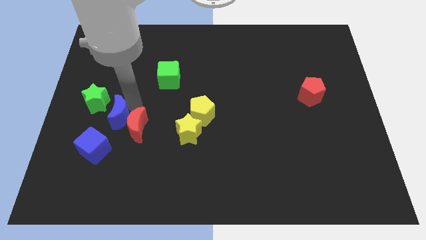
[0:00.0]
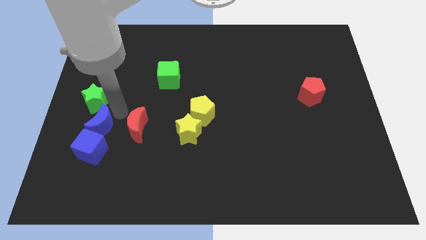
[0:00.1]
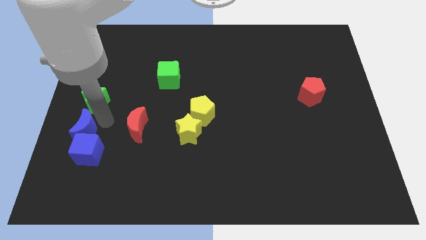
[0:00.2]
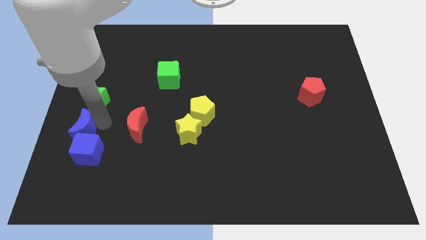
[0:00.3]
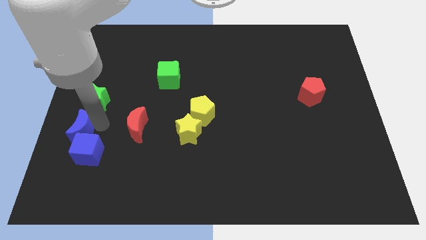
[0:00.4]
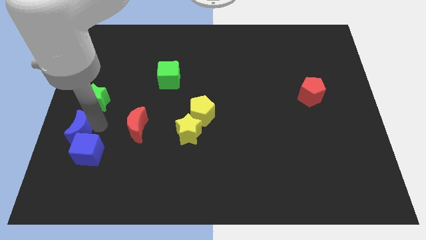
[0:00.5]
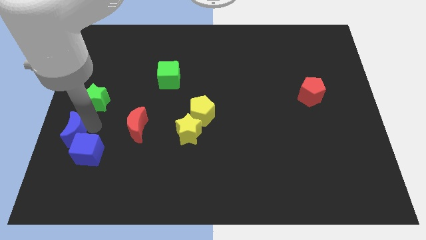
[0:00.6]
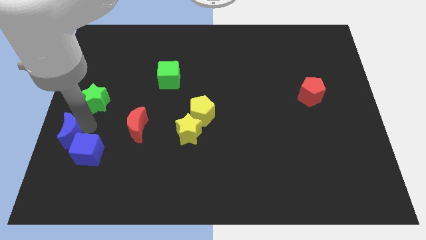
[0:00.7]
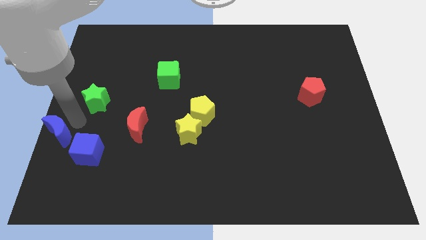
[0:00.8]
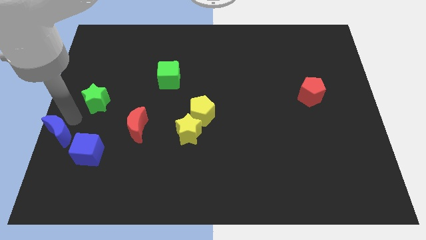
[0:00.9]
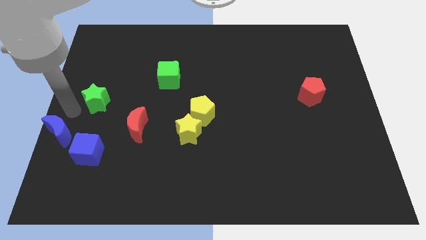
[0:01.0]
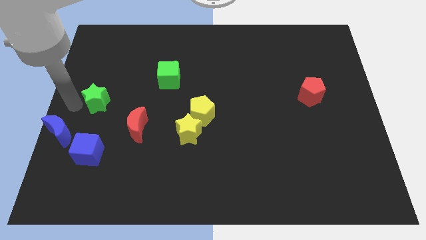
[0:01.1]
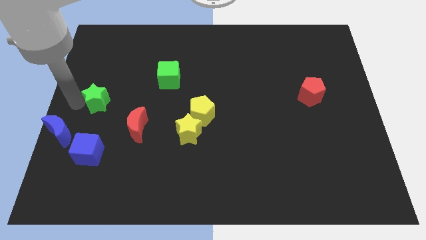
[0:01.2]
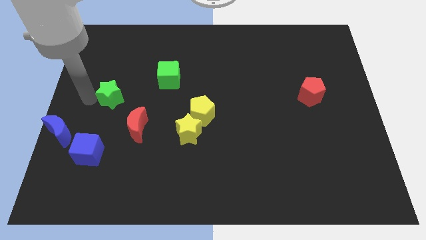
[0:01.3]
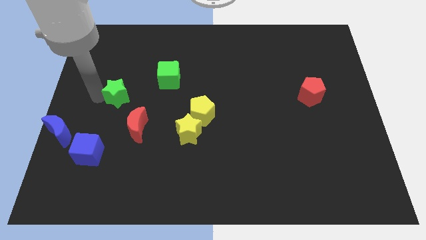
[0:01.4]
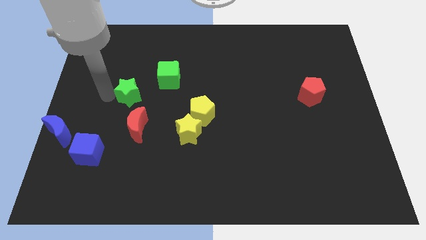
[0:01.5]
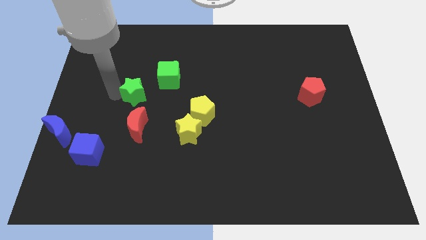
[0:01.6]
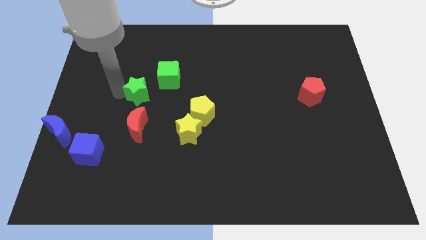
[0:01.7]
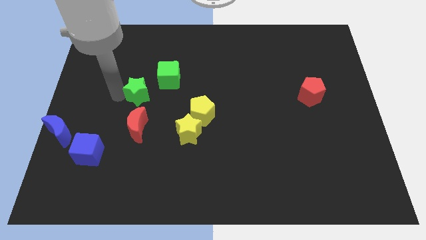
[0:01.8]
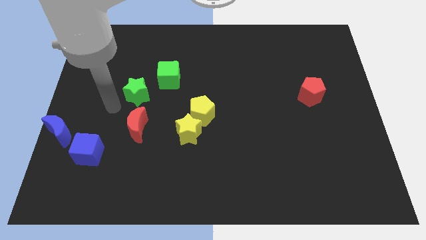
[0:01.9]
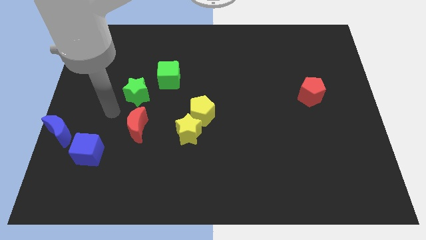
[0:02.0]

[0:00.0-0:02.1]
push the blue moon towards the left of the blue cube

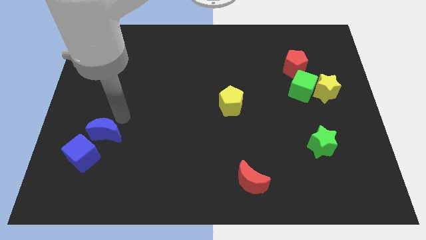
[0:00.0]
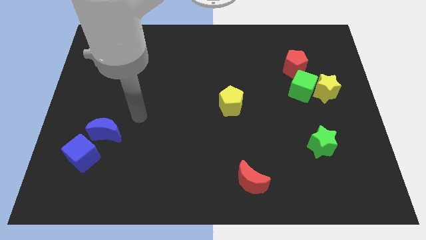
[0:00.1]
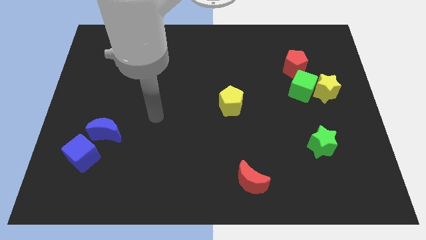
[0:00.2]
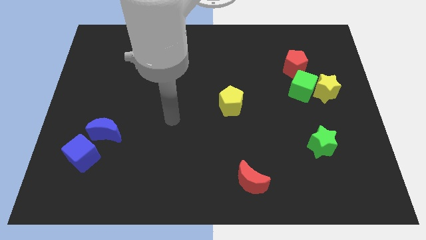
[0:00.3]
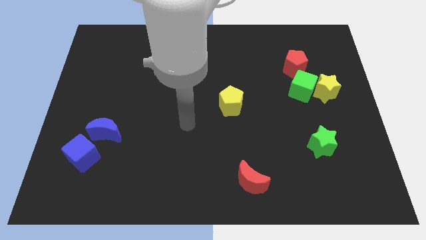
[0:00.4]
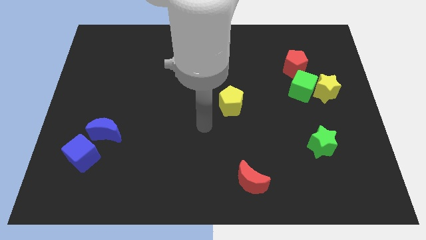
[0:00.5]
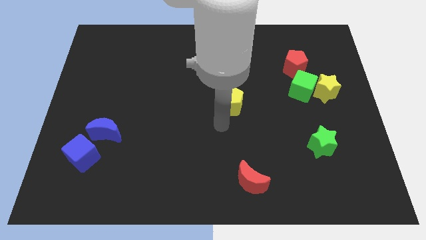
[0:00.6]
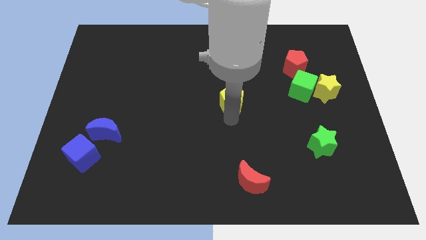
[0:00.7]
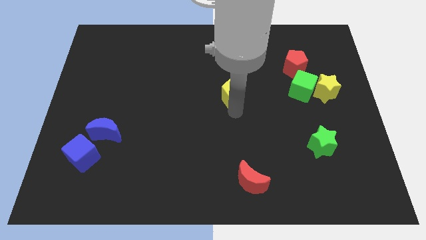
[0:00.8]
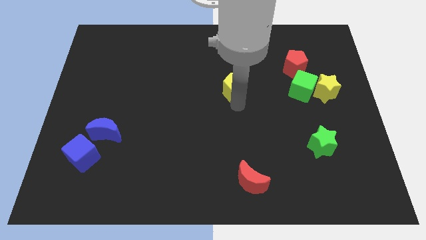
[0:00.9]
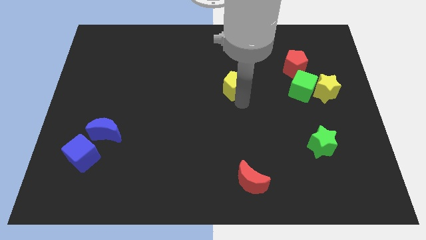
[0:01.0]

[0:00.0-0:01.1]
slide yellow pentagon to the left of green cube

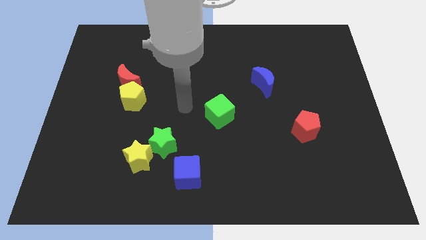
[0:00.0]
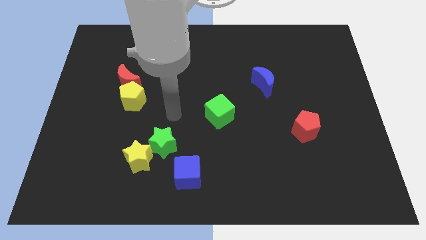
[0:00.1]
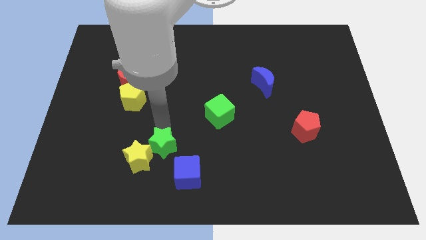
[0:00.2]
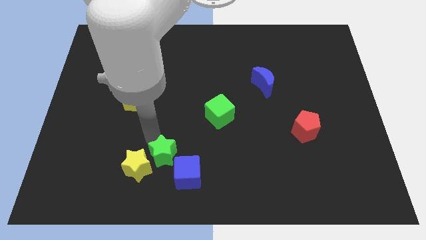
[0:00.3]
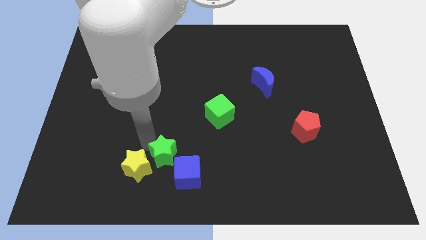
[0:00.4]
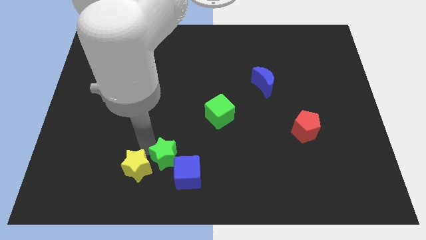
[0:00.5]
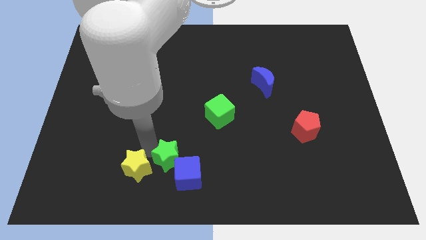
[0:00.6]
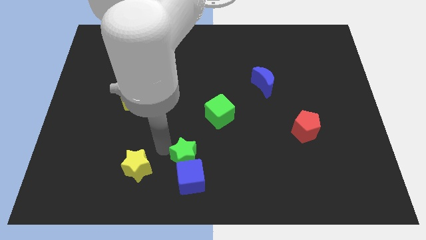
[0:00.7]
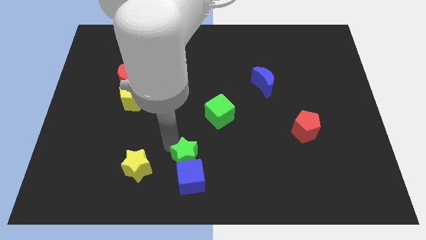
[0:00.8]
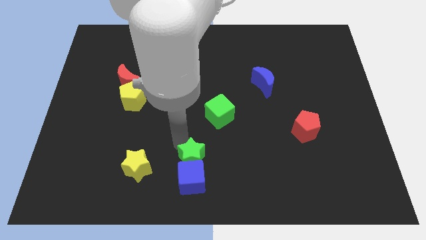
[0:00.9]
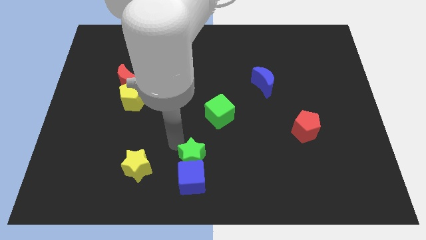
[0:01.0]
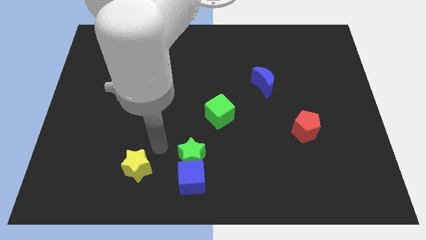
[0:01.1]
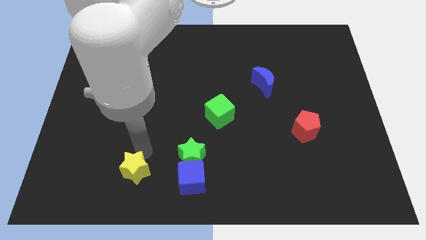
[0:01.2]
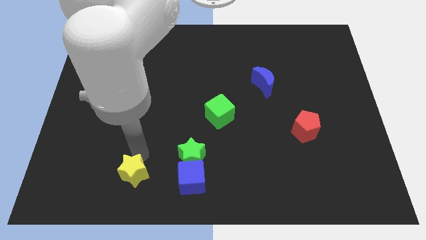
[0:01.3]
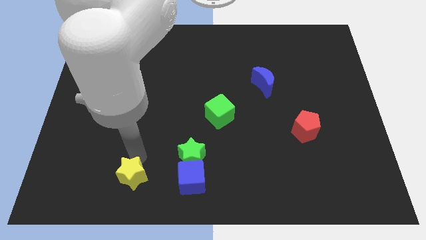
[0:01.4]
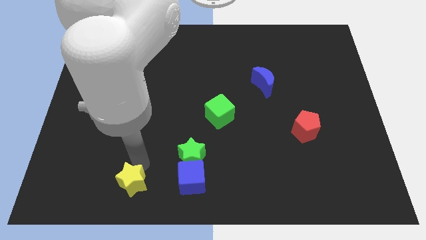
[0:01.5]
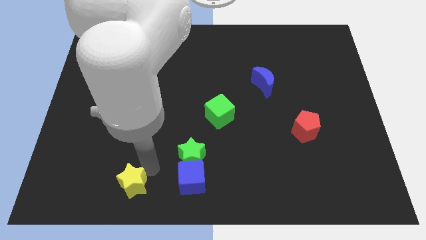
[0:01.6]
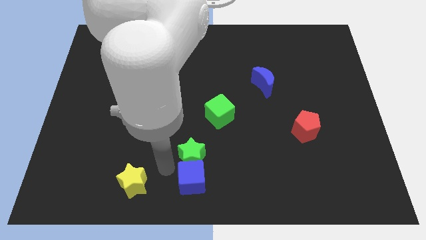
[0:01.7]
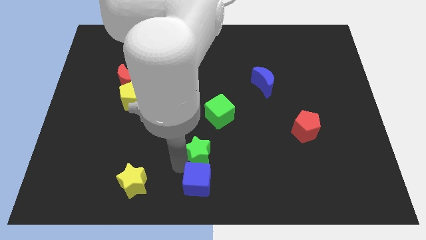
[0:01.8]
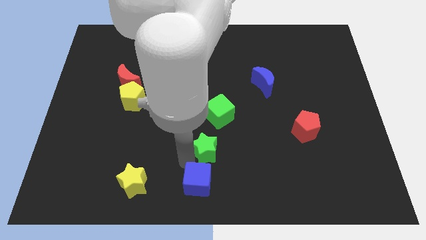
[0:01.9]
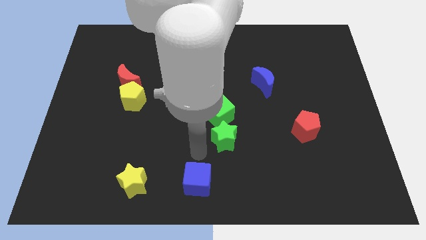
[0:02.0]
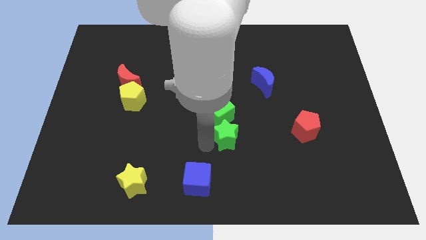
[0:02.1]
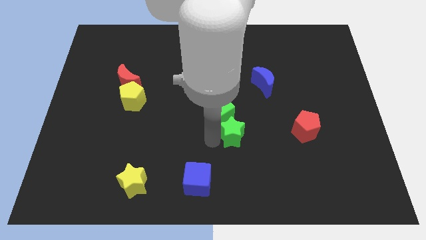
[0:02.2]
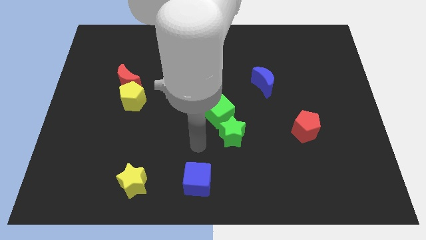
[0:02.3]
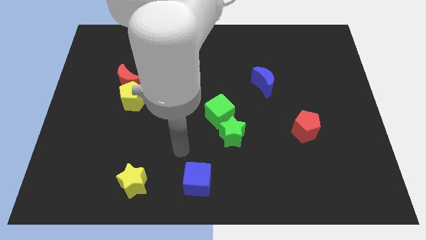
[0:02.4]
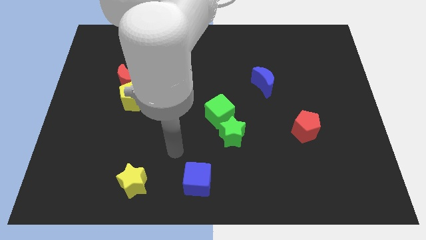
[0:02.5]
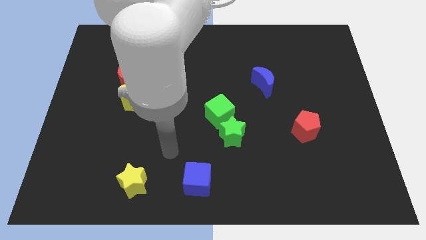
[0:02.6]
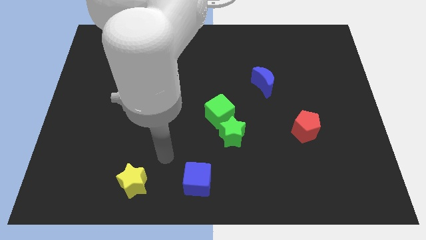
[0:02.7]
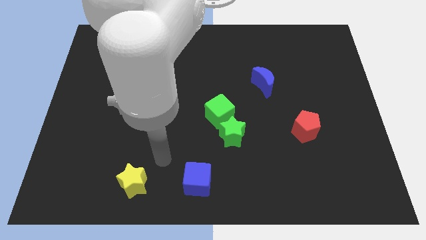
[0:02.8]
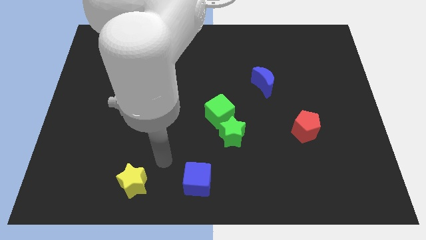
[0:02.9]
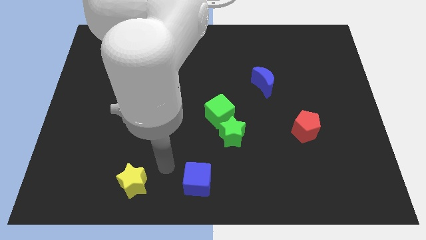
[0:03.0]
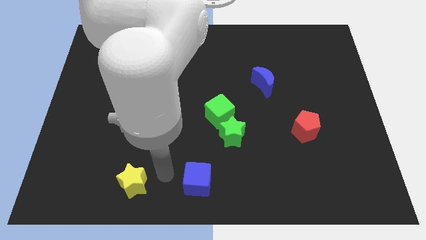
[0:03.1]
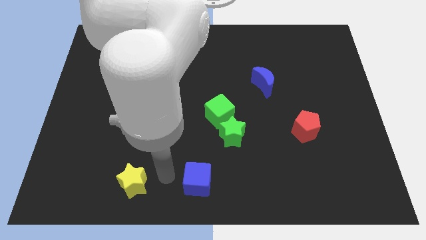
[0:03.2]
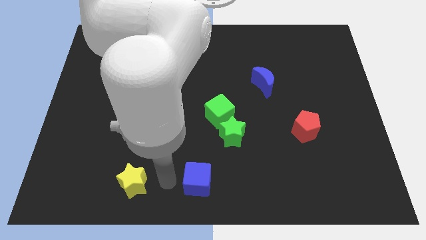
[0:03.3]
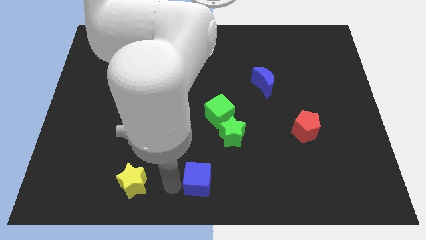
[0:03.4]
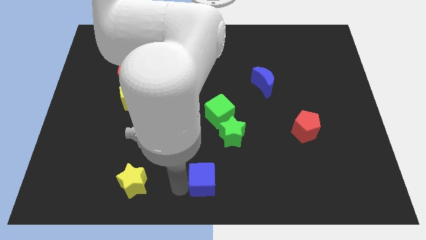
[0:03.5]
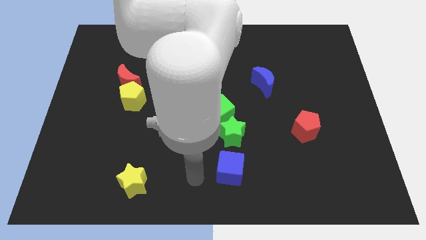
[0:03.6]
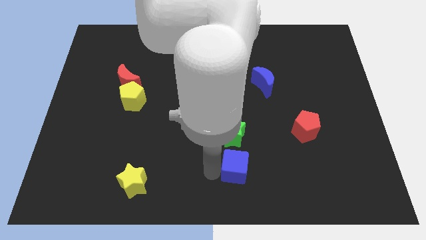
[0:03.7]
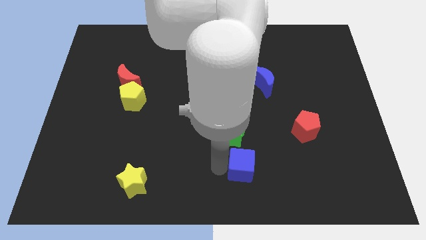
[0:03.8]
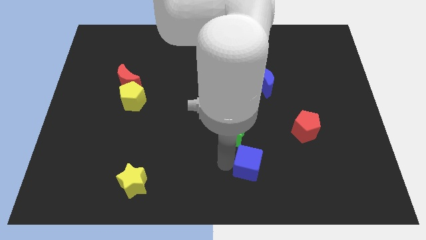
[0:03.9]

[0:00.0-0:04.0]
push the green star and blue cube to the right side of the board

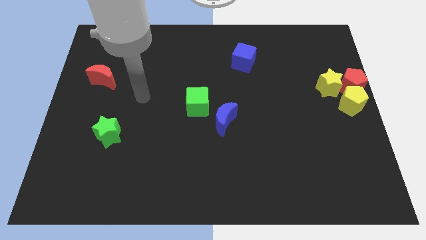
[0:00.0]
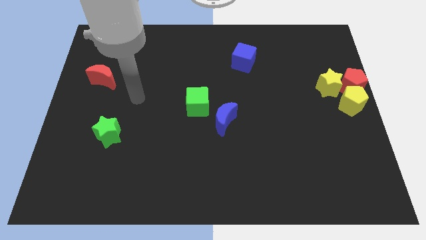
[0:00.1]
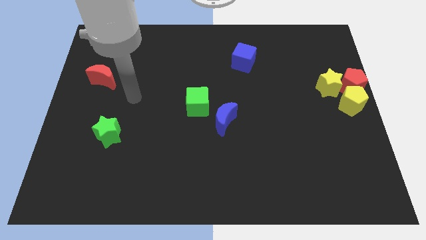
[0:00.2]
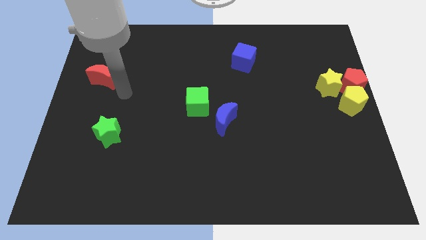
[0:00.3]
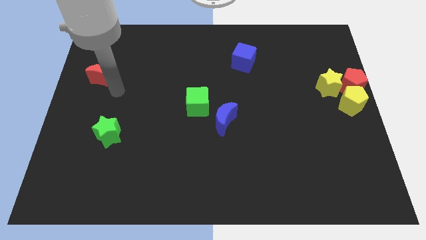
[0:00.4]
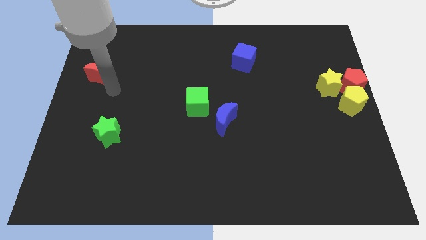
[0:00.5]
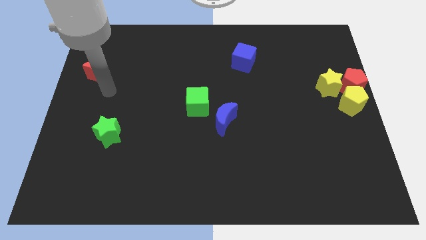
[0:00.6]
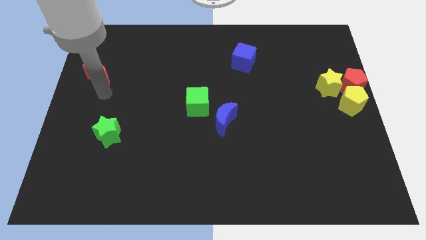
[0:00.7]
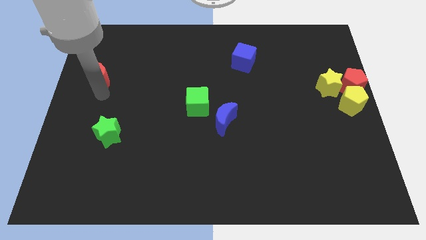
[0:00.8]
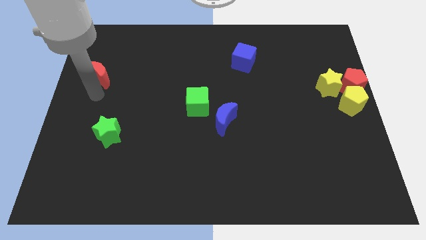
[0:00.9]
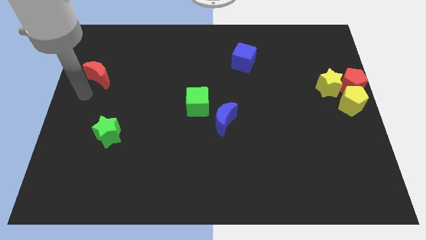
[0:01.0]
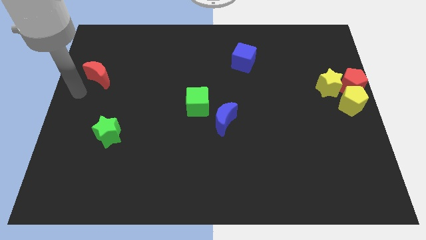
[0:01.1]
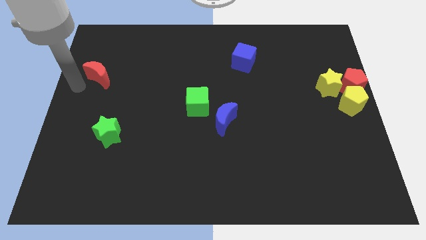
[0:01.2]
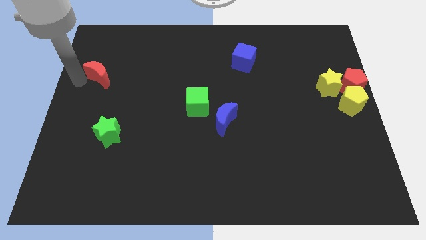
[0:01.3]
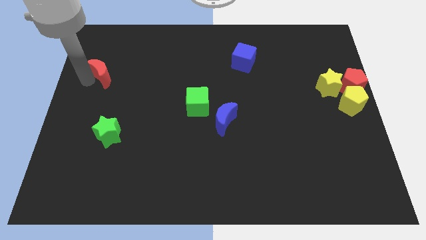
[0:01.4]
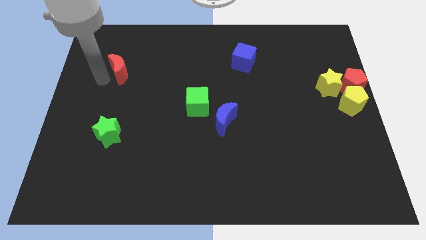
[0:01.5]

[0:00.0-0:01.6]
slide the red crescent vertically to the top side of the green star

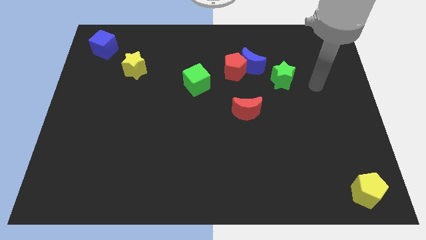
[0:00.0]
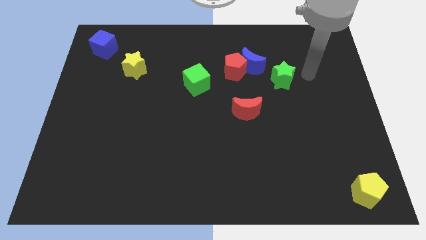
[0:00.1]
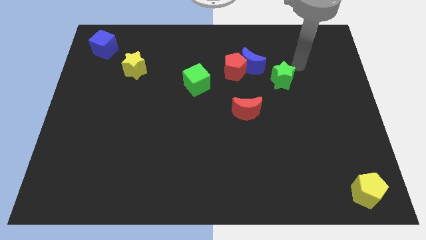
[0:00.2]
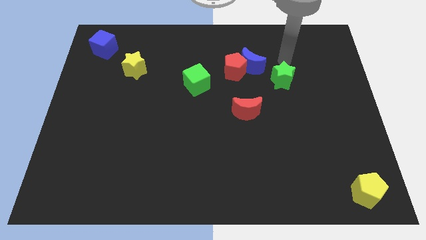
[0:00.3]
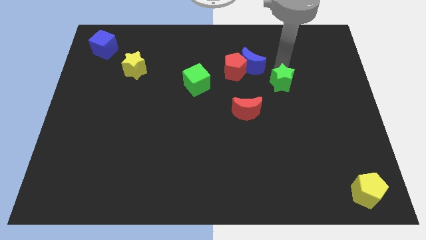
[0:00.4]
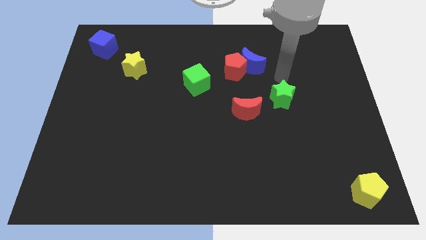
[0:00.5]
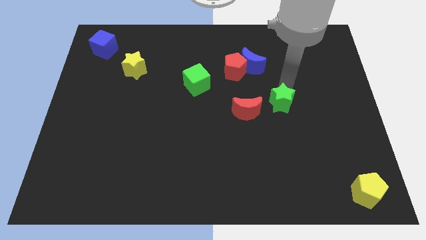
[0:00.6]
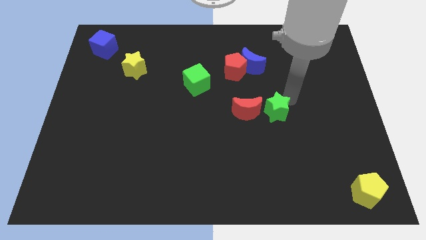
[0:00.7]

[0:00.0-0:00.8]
push the green star to the right of the red crescent
